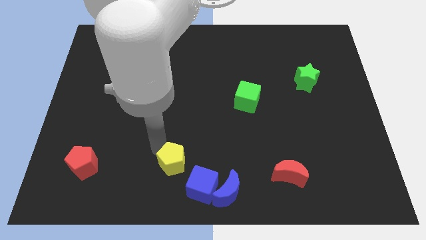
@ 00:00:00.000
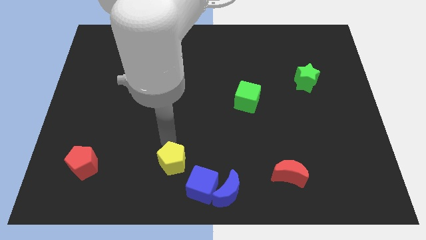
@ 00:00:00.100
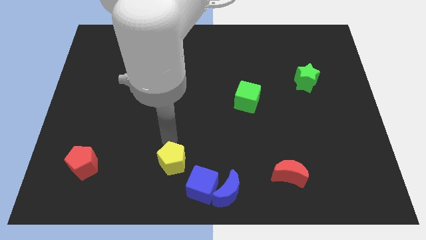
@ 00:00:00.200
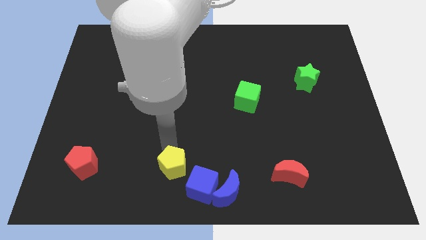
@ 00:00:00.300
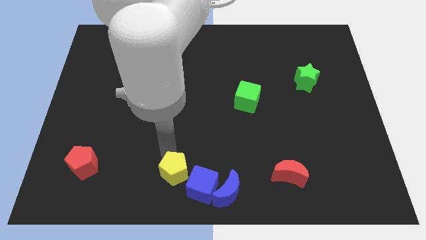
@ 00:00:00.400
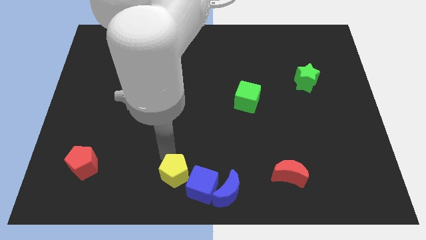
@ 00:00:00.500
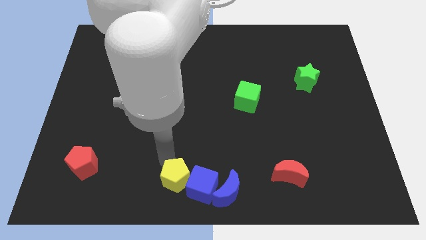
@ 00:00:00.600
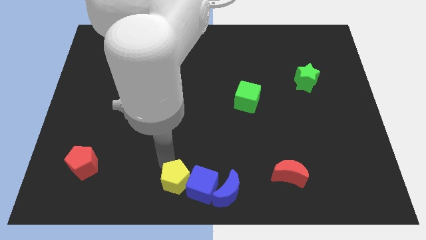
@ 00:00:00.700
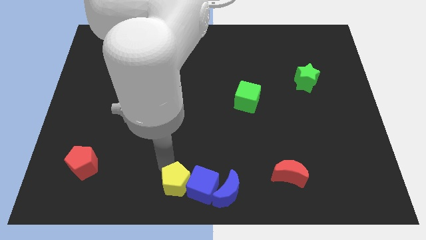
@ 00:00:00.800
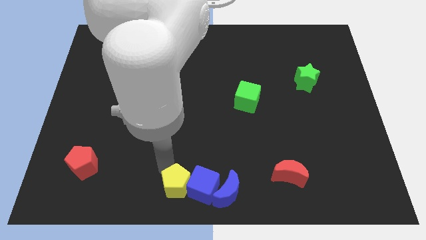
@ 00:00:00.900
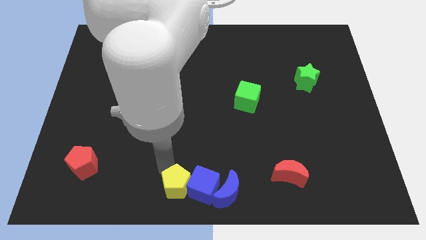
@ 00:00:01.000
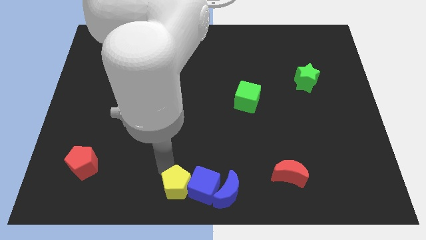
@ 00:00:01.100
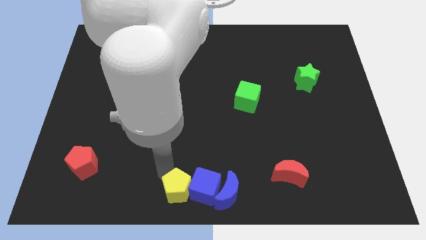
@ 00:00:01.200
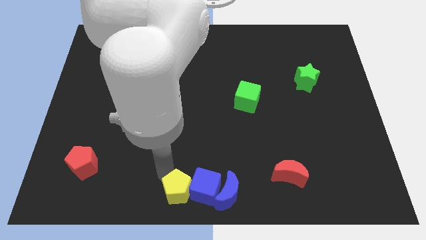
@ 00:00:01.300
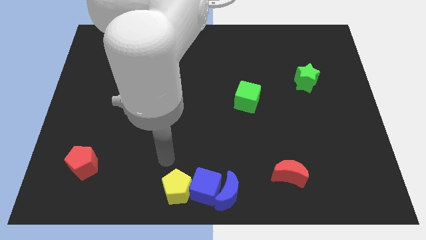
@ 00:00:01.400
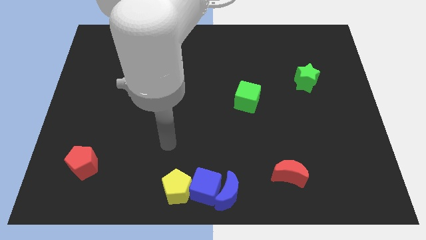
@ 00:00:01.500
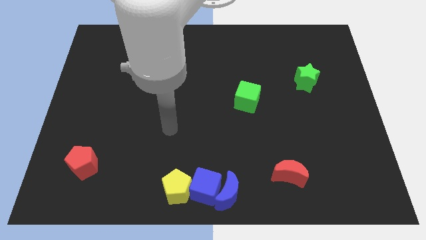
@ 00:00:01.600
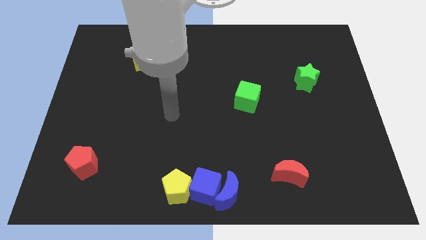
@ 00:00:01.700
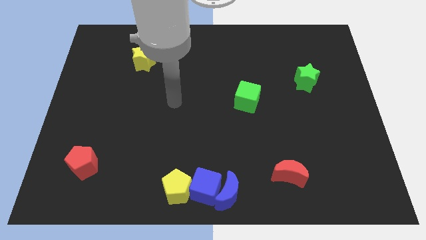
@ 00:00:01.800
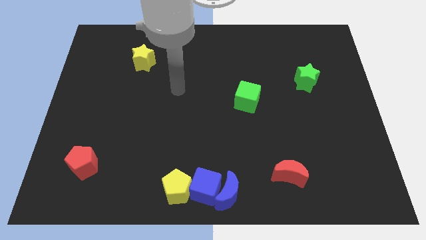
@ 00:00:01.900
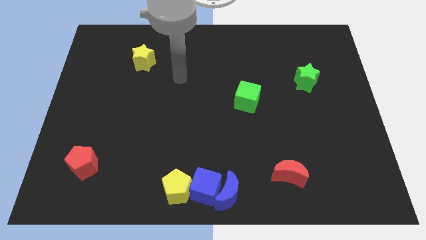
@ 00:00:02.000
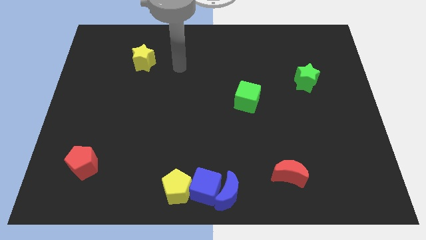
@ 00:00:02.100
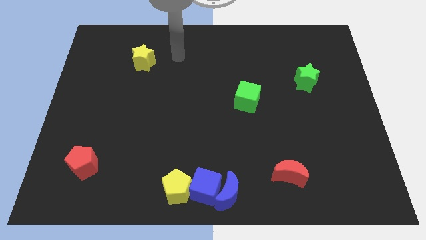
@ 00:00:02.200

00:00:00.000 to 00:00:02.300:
move the yellow pentagon to the left of the blue cube

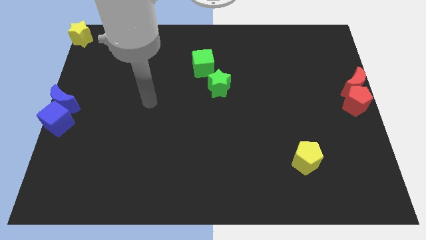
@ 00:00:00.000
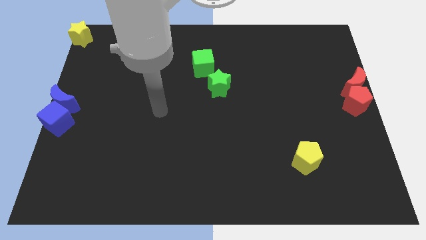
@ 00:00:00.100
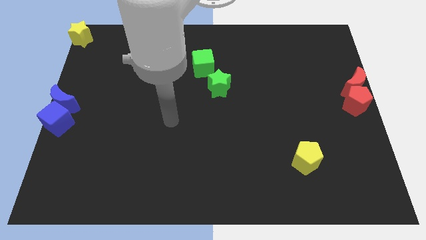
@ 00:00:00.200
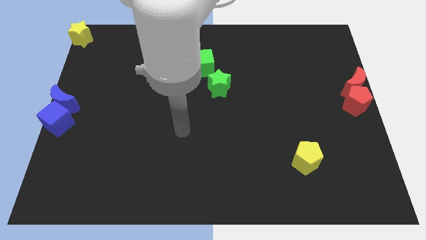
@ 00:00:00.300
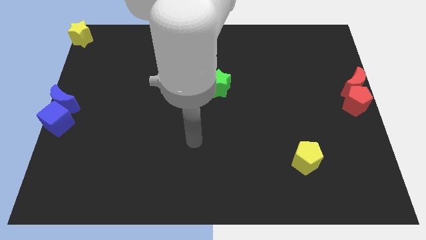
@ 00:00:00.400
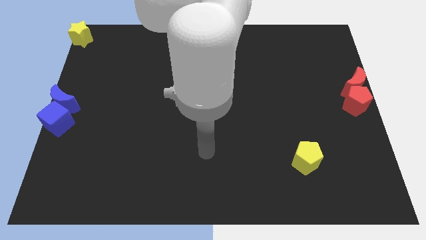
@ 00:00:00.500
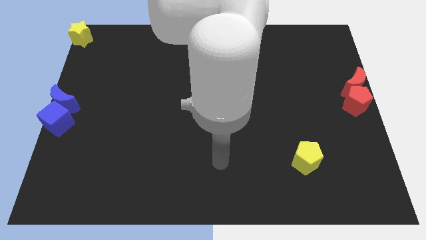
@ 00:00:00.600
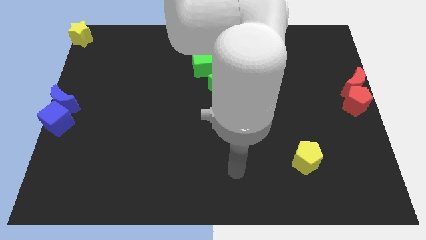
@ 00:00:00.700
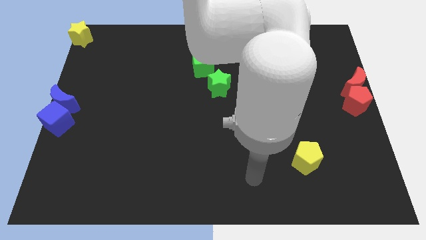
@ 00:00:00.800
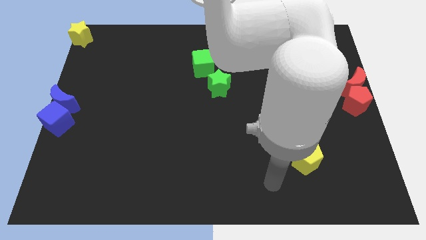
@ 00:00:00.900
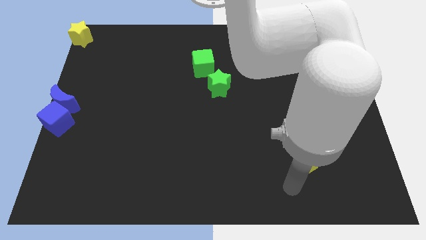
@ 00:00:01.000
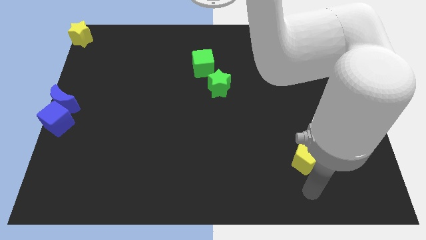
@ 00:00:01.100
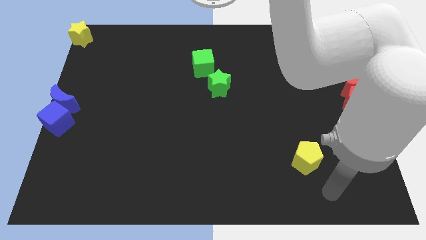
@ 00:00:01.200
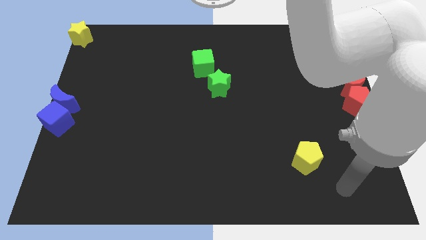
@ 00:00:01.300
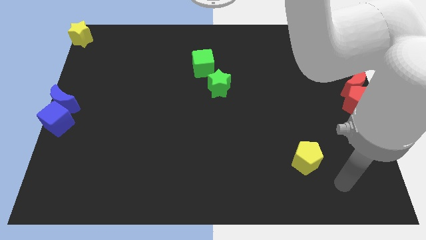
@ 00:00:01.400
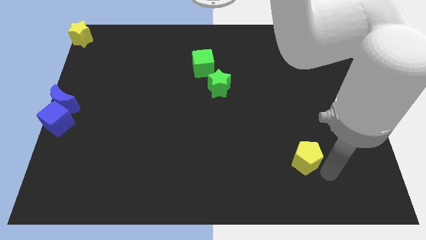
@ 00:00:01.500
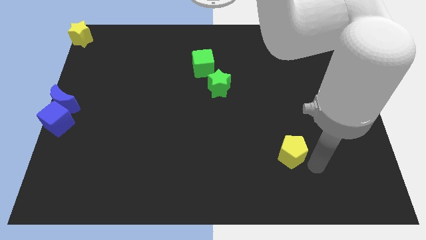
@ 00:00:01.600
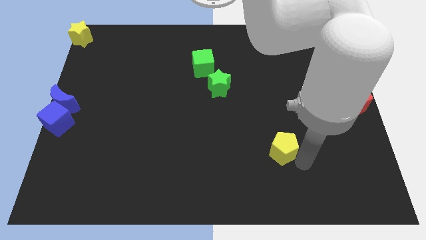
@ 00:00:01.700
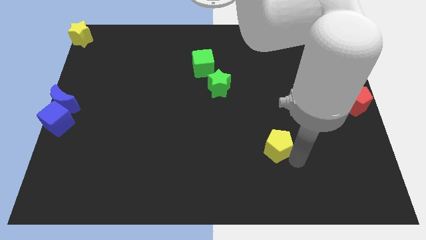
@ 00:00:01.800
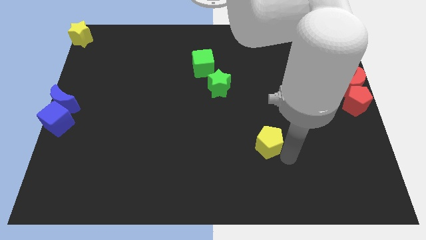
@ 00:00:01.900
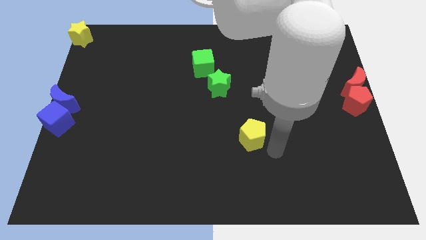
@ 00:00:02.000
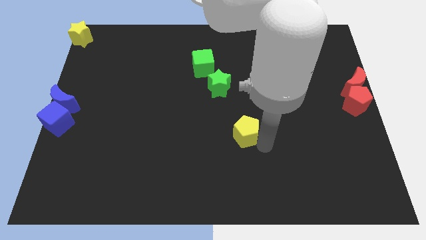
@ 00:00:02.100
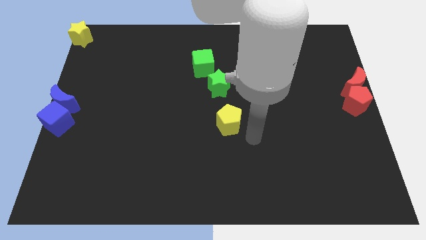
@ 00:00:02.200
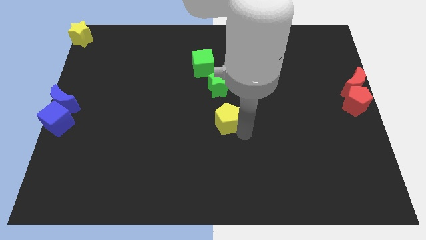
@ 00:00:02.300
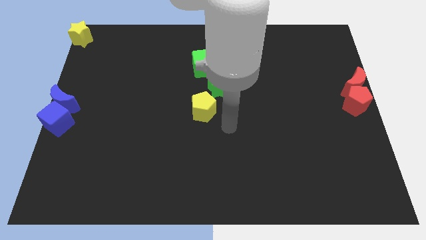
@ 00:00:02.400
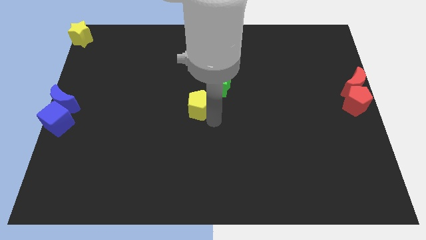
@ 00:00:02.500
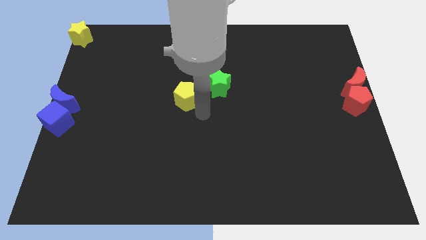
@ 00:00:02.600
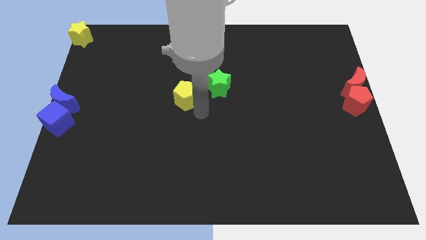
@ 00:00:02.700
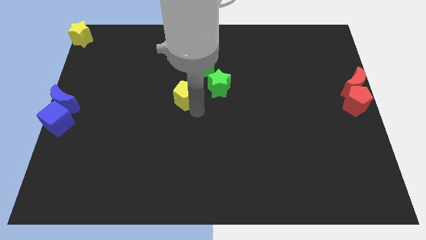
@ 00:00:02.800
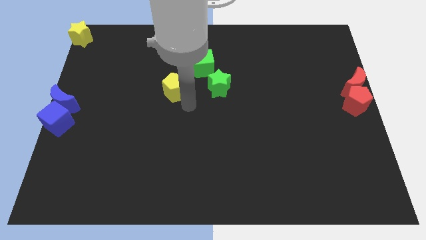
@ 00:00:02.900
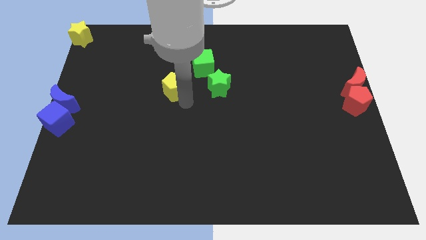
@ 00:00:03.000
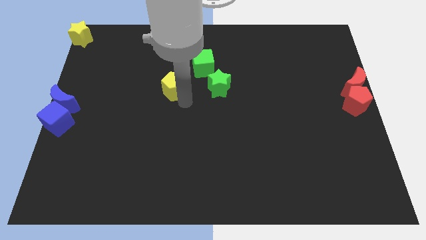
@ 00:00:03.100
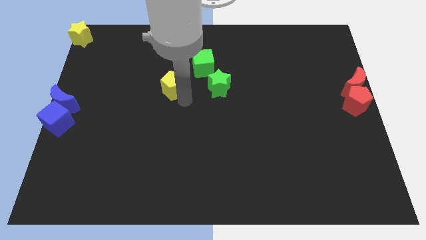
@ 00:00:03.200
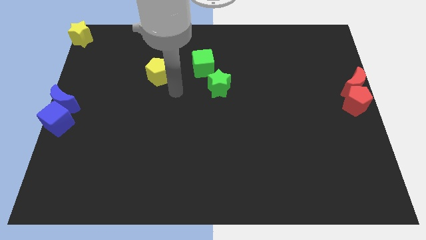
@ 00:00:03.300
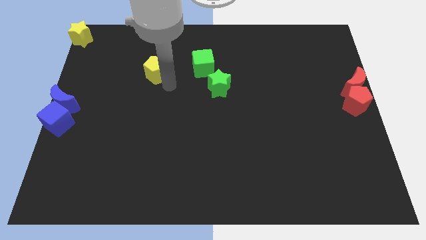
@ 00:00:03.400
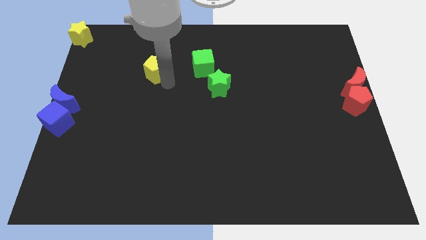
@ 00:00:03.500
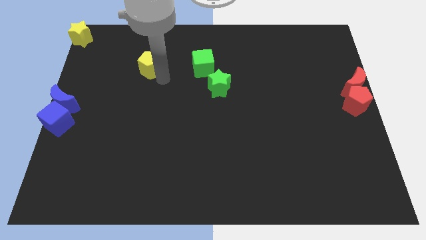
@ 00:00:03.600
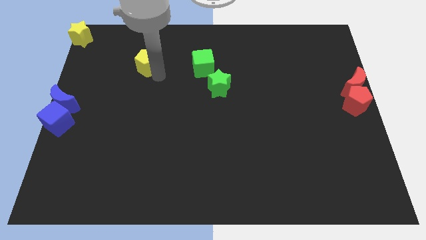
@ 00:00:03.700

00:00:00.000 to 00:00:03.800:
place the yellow pentagon horizontal to the green cube

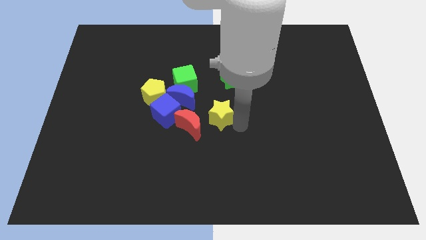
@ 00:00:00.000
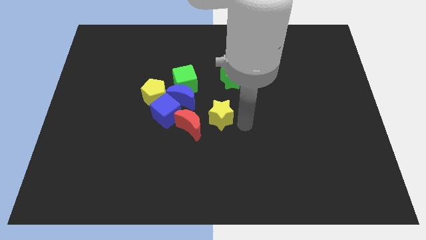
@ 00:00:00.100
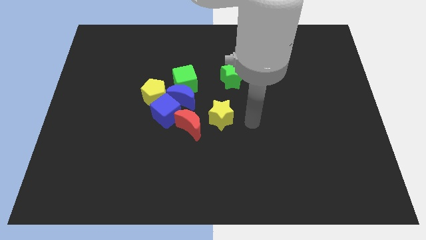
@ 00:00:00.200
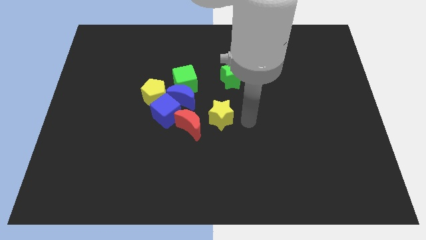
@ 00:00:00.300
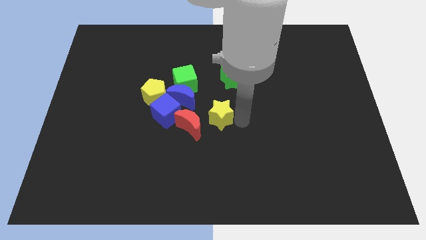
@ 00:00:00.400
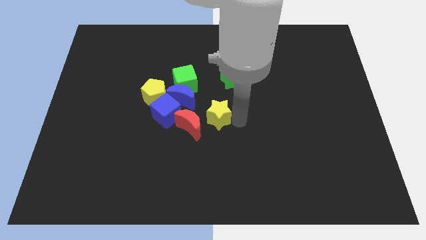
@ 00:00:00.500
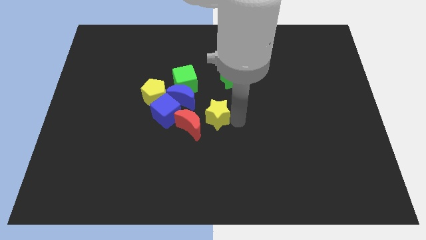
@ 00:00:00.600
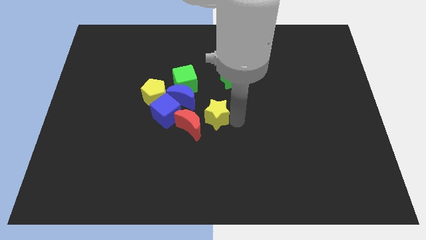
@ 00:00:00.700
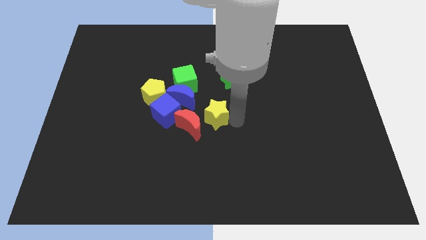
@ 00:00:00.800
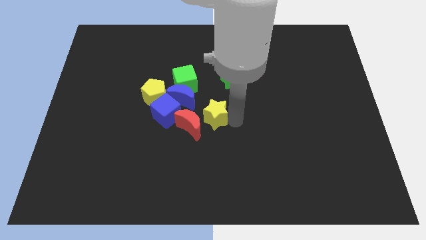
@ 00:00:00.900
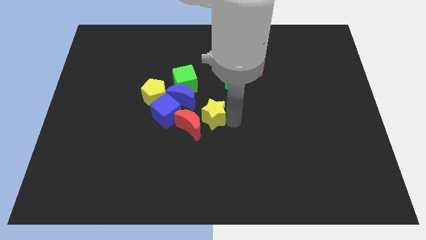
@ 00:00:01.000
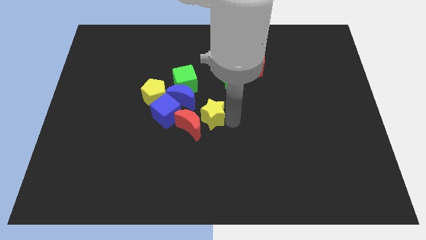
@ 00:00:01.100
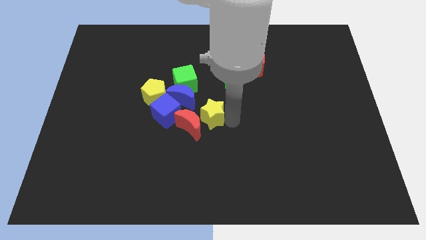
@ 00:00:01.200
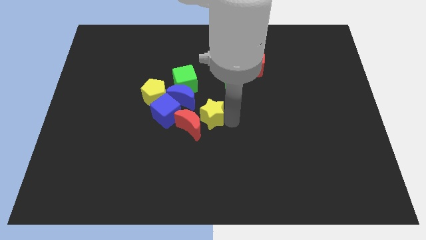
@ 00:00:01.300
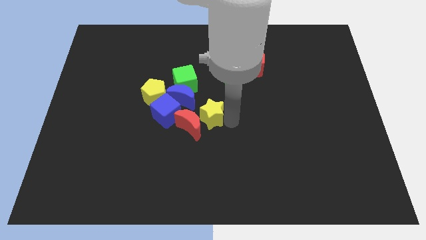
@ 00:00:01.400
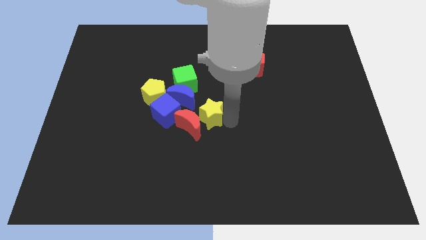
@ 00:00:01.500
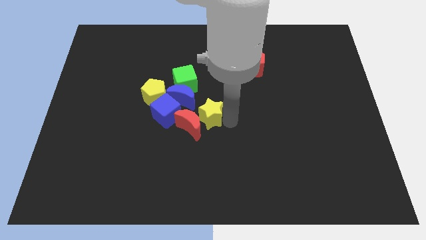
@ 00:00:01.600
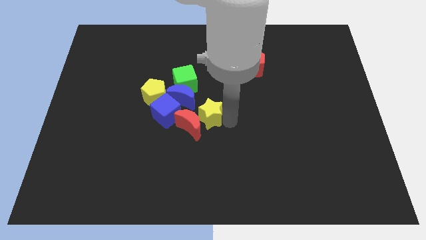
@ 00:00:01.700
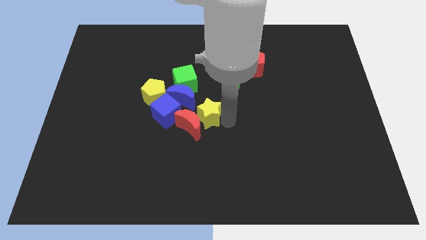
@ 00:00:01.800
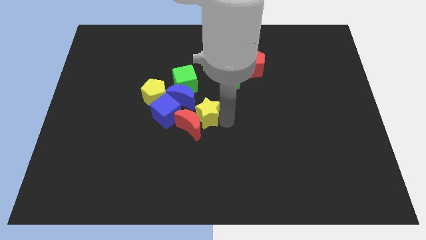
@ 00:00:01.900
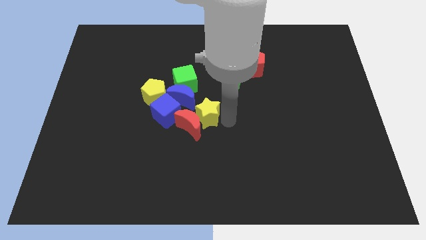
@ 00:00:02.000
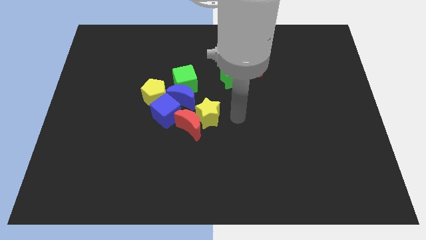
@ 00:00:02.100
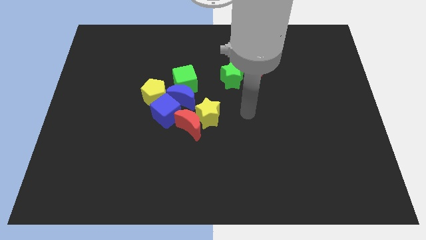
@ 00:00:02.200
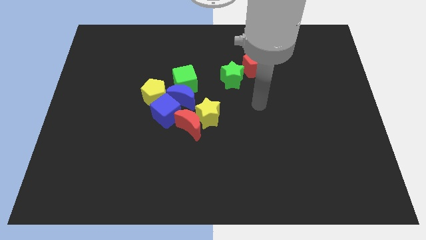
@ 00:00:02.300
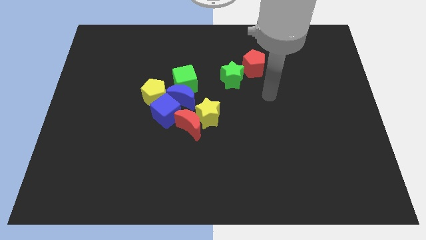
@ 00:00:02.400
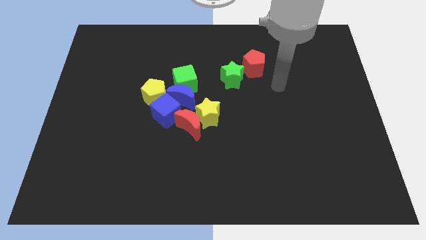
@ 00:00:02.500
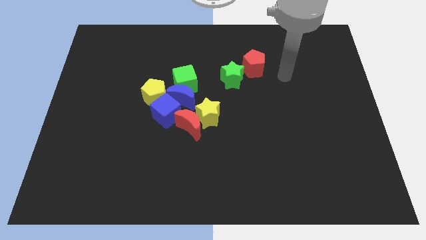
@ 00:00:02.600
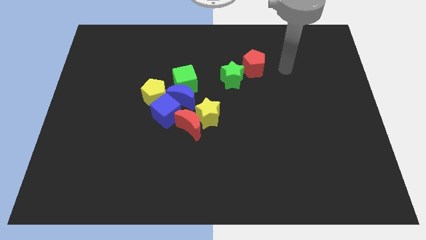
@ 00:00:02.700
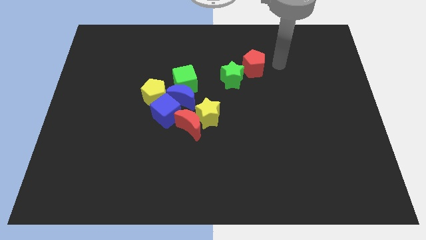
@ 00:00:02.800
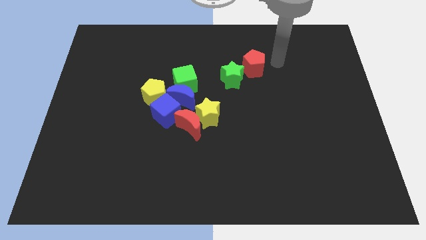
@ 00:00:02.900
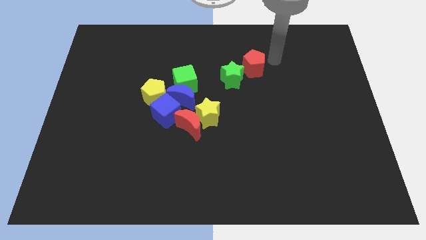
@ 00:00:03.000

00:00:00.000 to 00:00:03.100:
slide the yellow star diagonally to the bottom left of the green star
